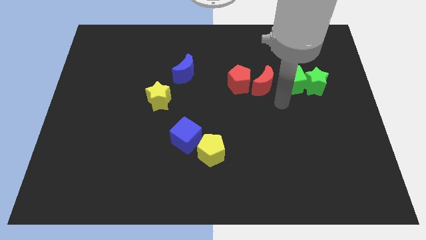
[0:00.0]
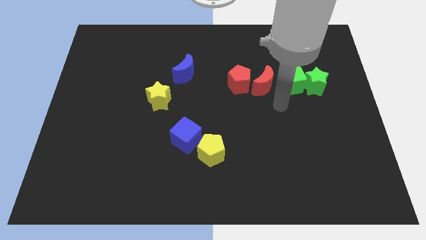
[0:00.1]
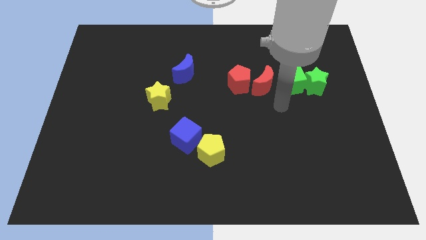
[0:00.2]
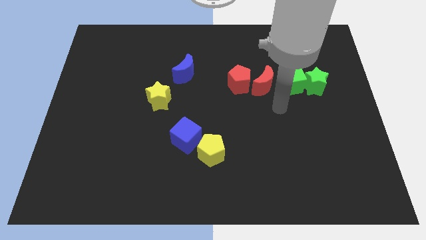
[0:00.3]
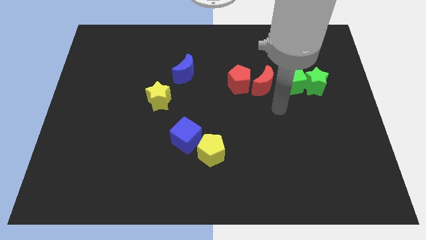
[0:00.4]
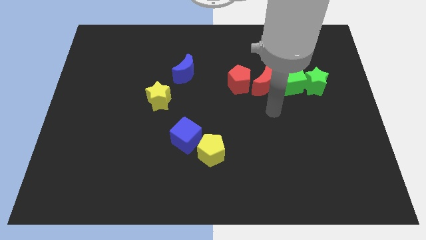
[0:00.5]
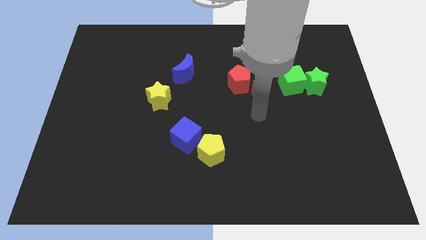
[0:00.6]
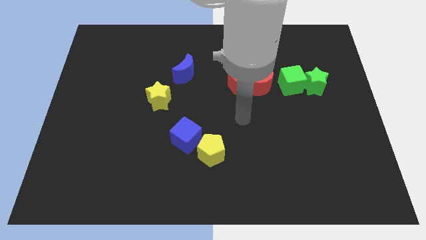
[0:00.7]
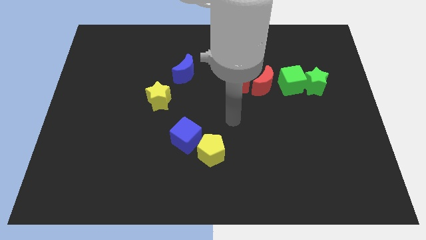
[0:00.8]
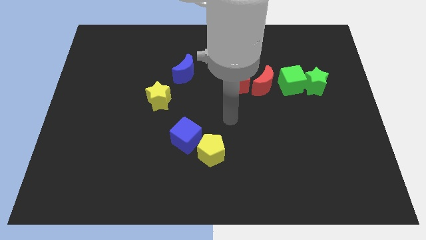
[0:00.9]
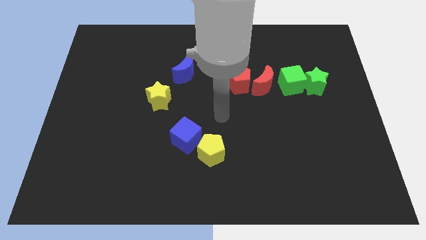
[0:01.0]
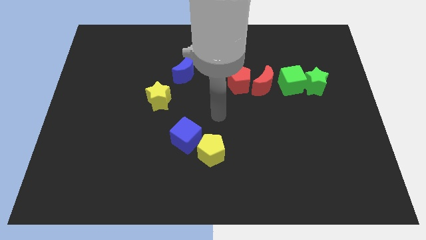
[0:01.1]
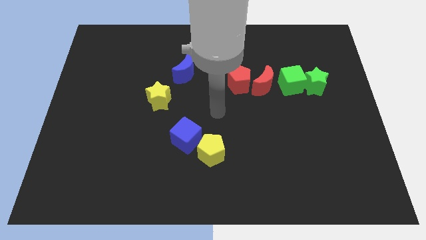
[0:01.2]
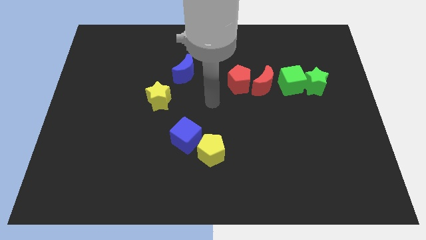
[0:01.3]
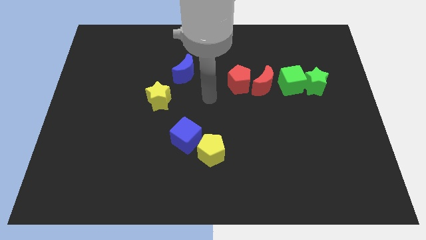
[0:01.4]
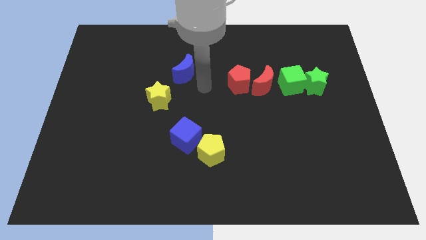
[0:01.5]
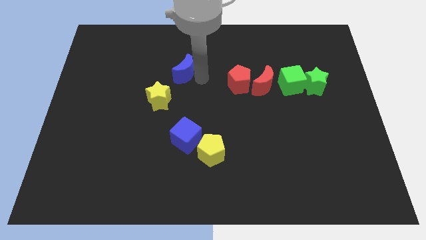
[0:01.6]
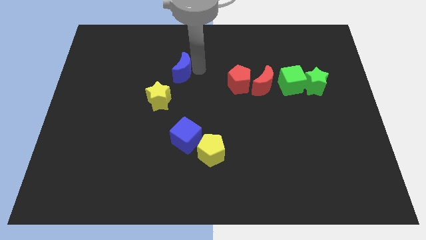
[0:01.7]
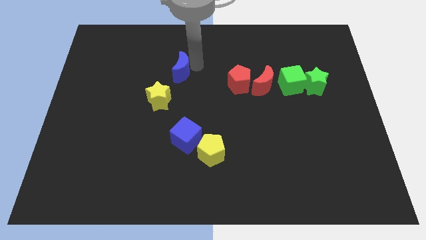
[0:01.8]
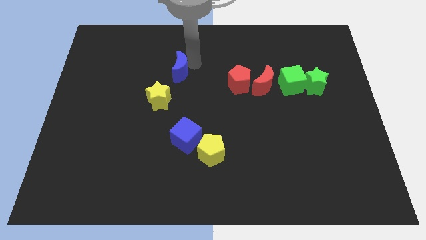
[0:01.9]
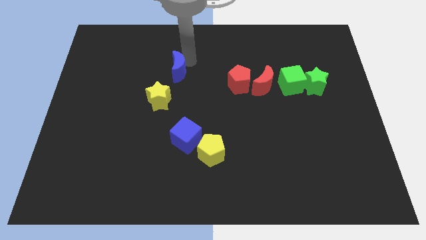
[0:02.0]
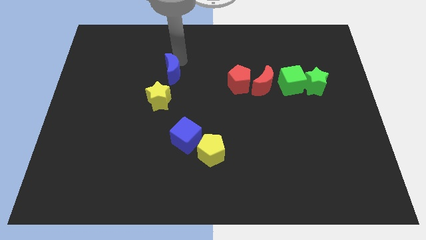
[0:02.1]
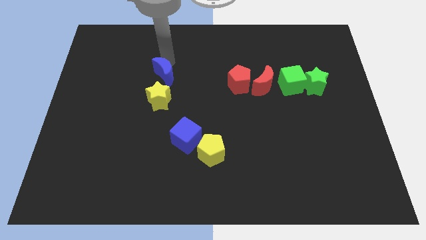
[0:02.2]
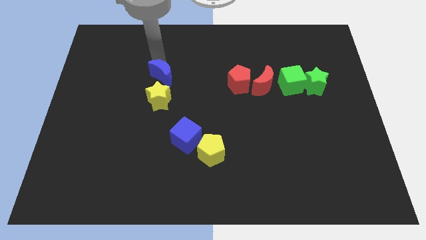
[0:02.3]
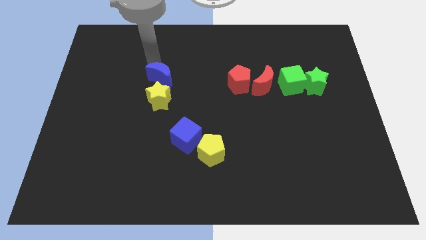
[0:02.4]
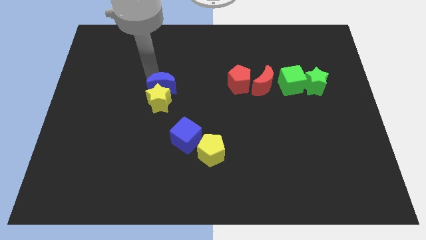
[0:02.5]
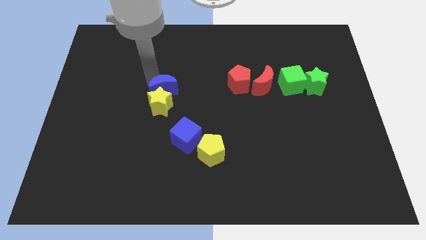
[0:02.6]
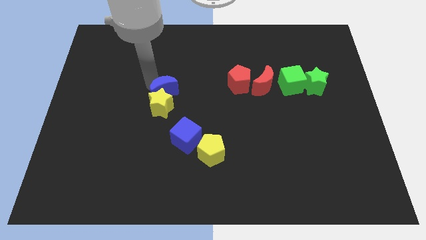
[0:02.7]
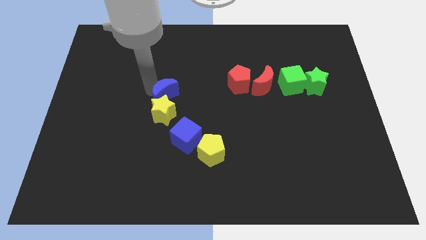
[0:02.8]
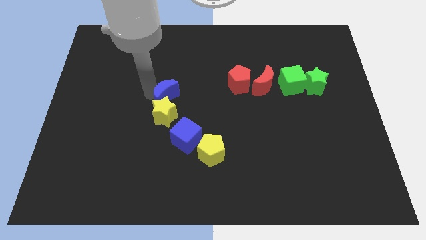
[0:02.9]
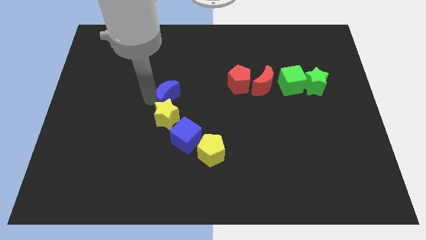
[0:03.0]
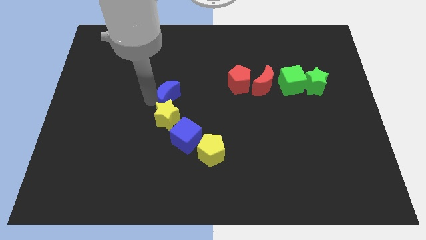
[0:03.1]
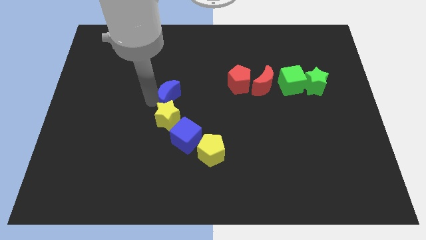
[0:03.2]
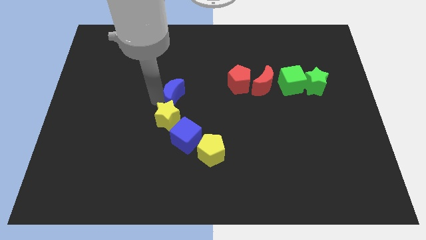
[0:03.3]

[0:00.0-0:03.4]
place blue moon to the top of the yellow star

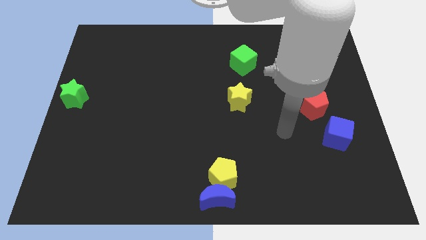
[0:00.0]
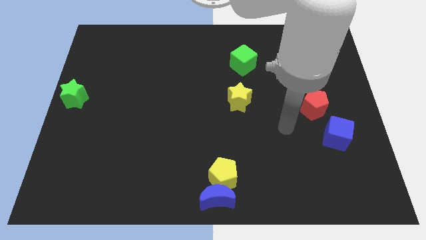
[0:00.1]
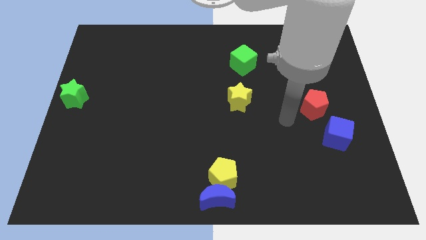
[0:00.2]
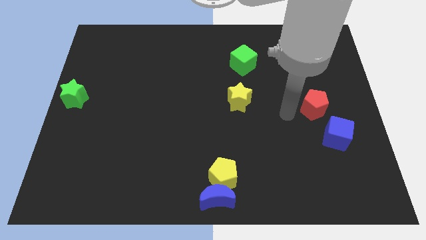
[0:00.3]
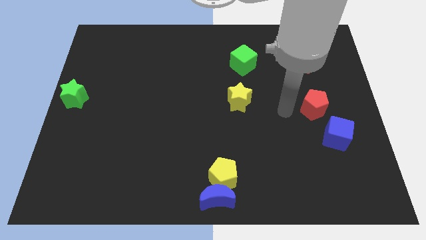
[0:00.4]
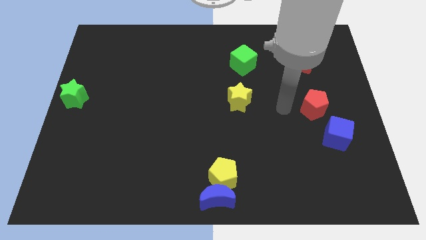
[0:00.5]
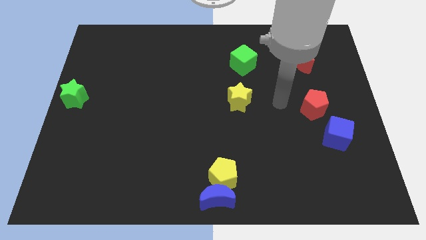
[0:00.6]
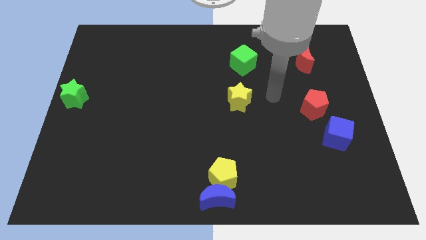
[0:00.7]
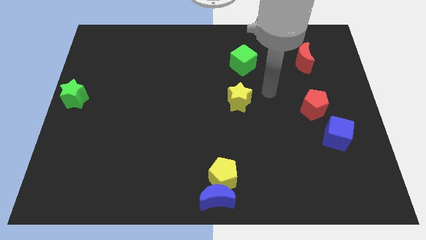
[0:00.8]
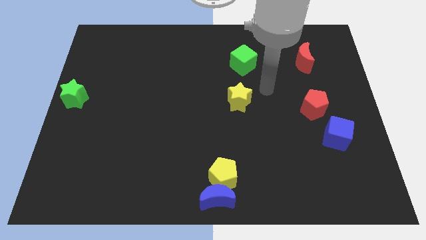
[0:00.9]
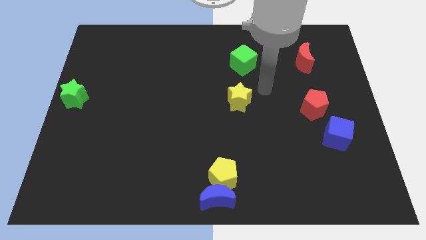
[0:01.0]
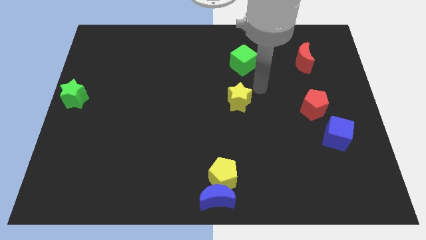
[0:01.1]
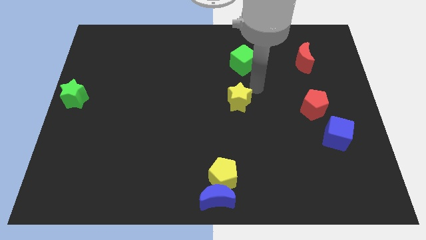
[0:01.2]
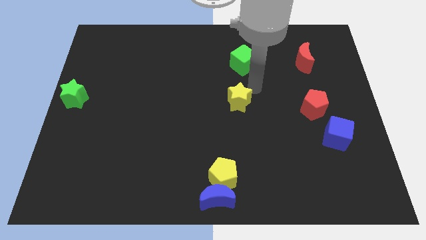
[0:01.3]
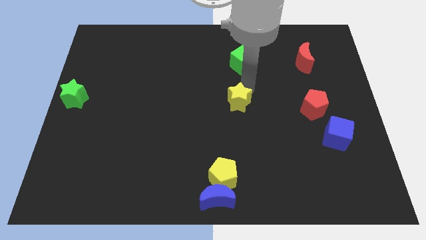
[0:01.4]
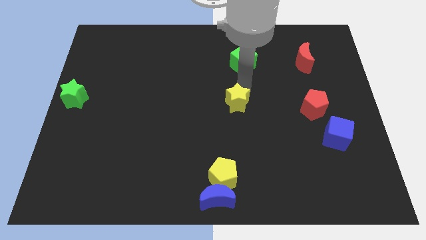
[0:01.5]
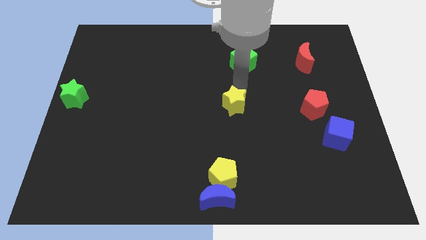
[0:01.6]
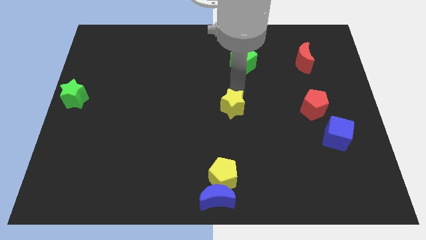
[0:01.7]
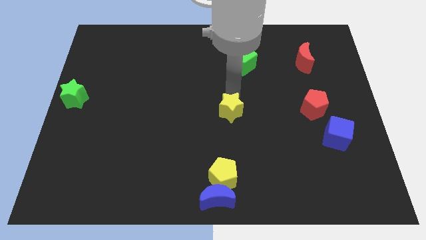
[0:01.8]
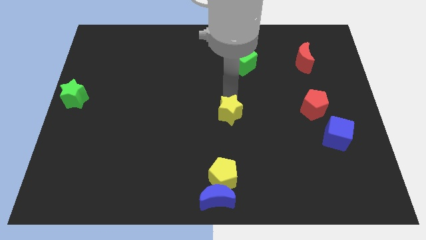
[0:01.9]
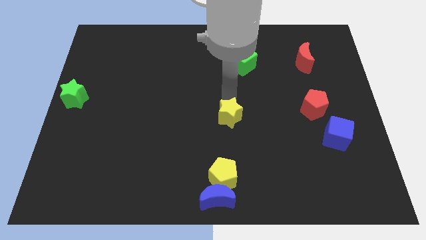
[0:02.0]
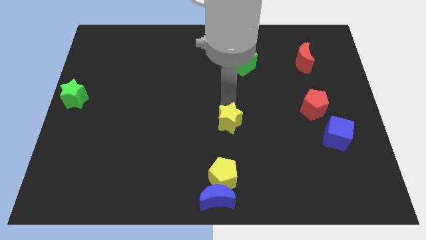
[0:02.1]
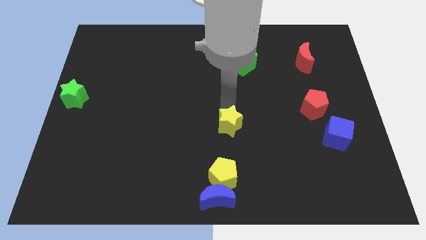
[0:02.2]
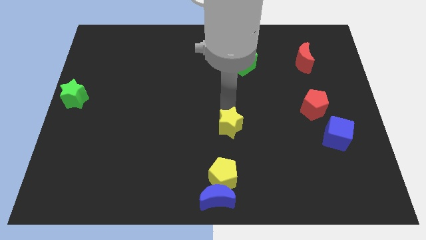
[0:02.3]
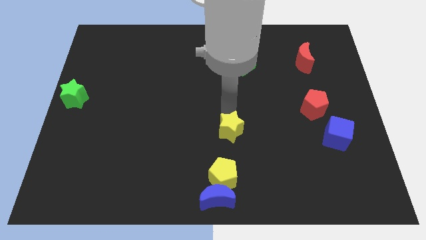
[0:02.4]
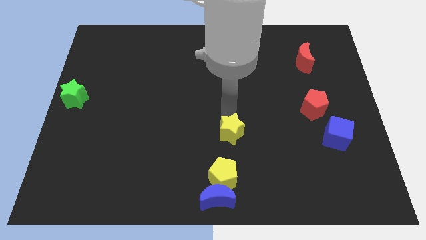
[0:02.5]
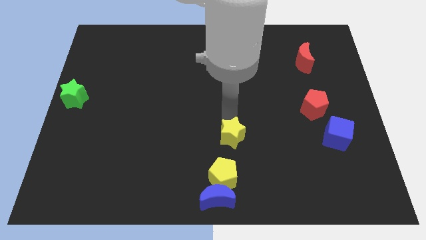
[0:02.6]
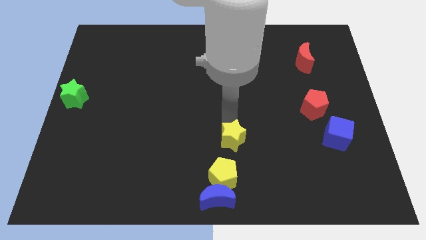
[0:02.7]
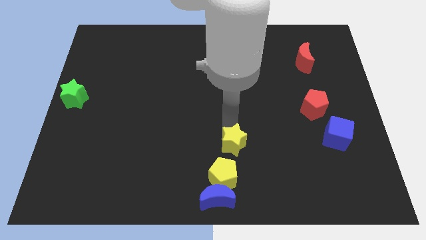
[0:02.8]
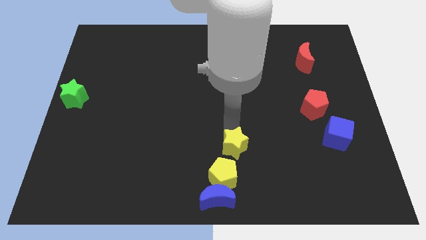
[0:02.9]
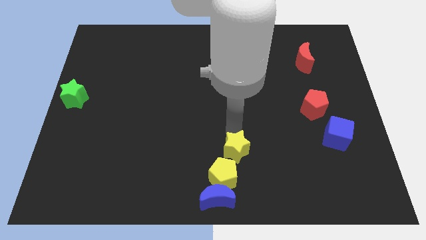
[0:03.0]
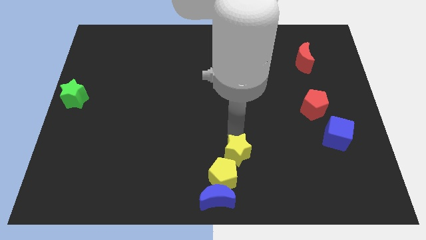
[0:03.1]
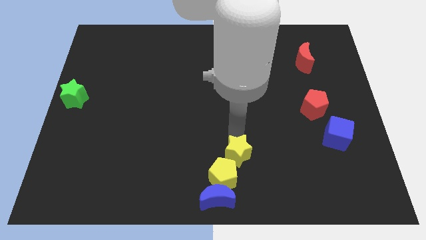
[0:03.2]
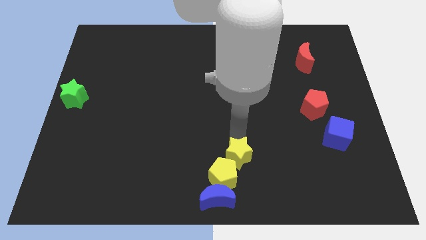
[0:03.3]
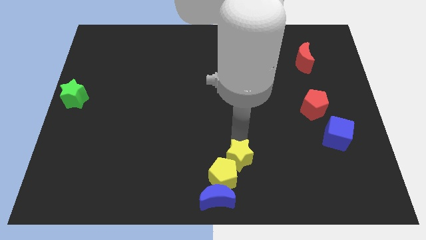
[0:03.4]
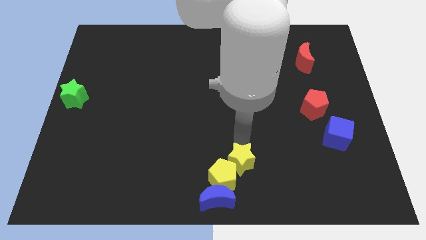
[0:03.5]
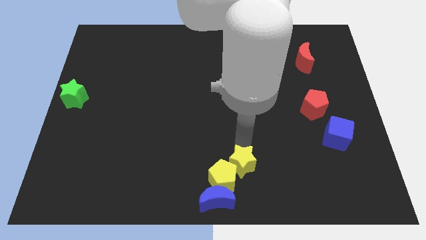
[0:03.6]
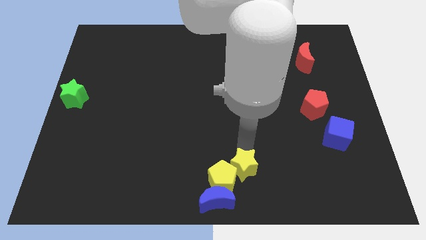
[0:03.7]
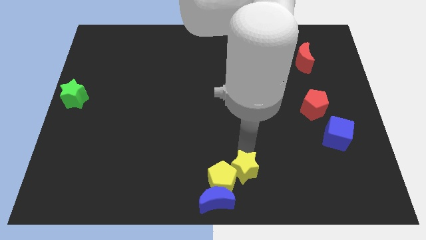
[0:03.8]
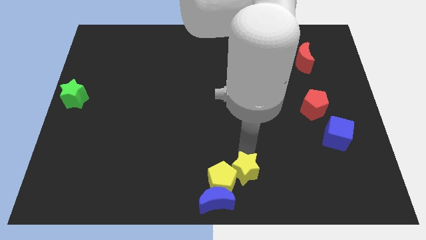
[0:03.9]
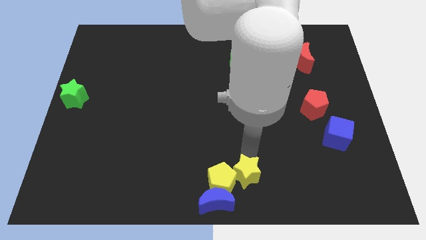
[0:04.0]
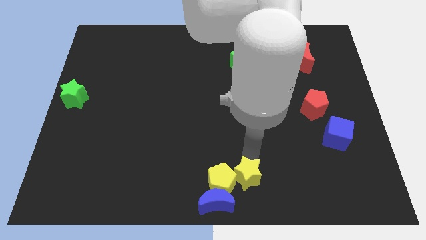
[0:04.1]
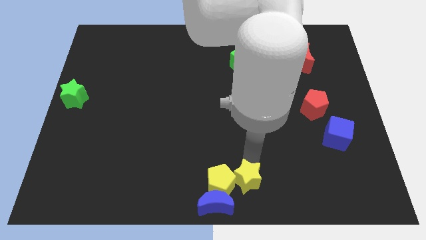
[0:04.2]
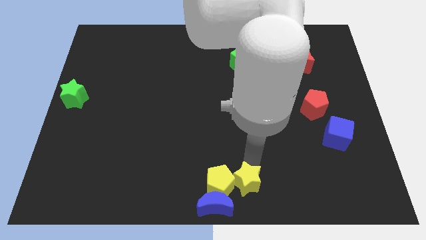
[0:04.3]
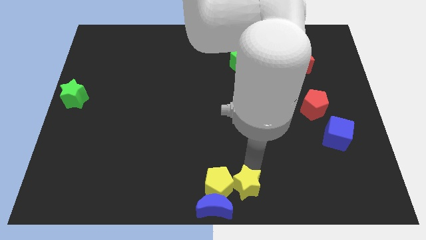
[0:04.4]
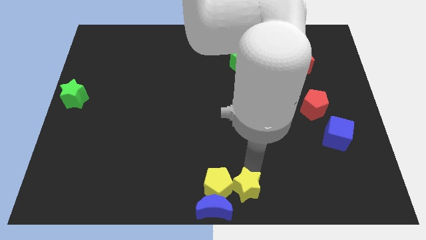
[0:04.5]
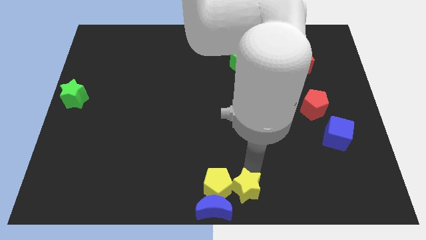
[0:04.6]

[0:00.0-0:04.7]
move the yellow star to the right of the yellow pentagon

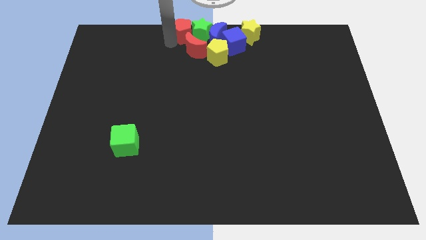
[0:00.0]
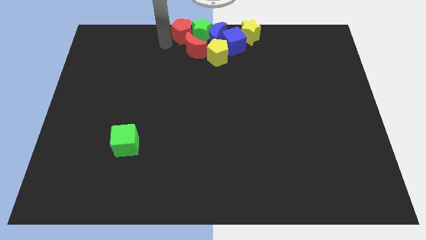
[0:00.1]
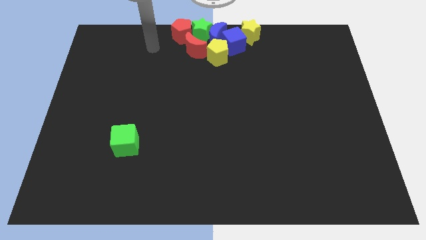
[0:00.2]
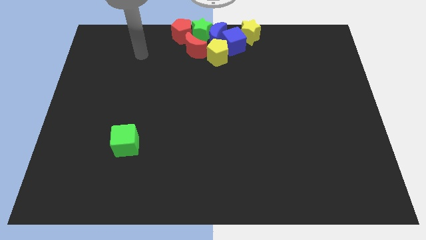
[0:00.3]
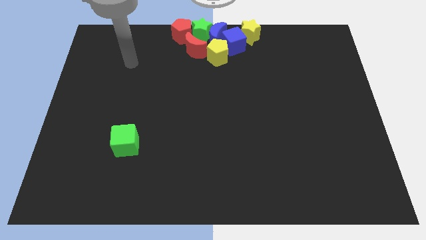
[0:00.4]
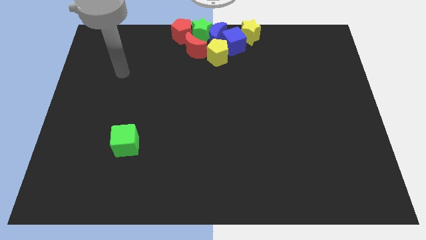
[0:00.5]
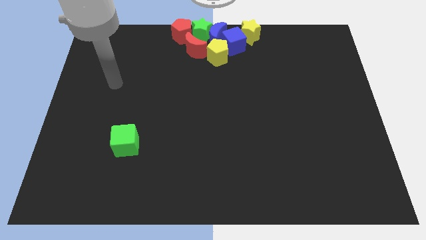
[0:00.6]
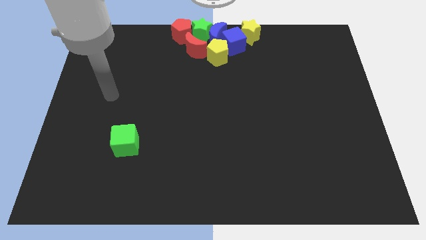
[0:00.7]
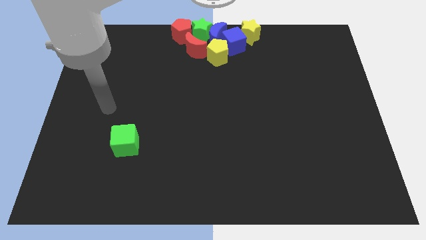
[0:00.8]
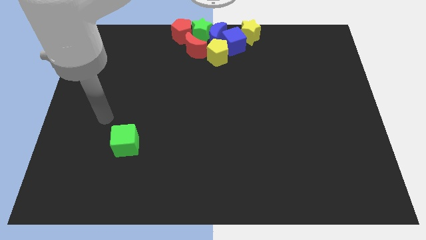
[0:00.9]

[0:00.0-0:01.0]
move your arm away from the red pentagon
